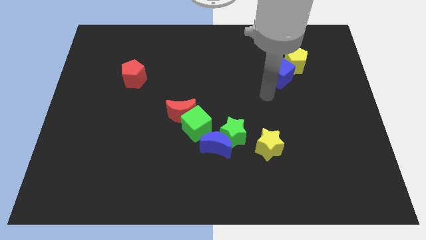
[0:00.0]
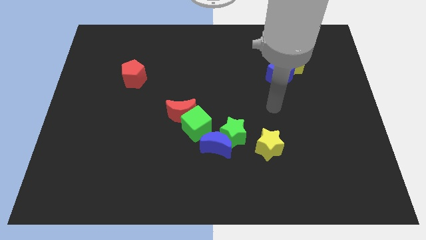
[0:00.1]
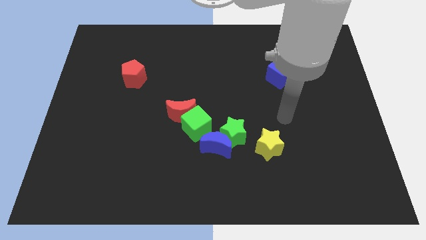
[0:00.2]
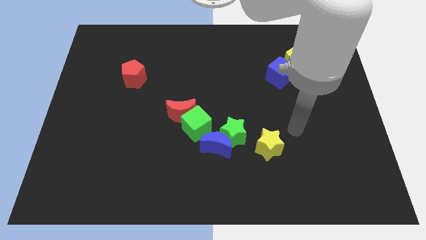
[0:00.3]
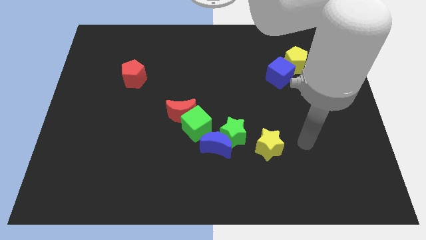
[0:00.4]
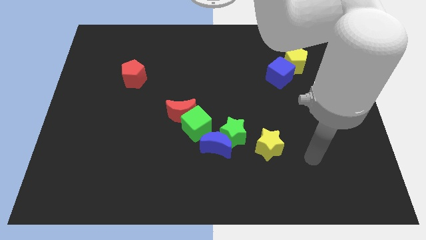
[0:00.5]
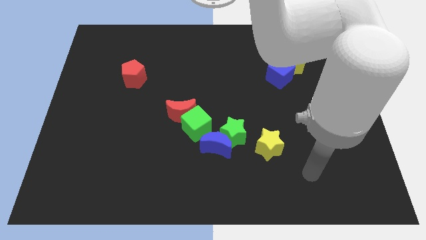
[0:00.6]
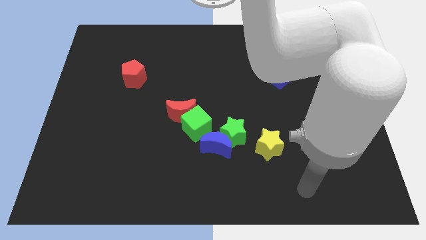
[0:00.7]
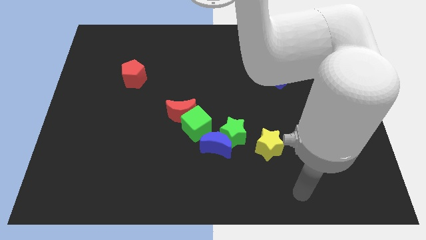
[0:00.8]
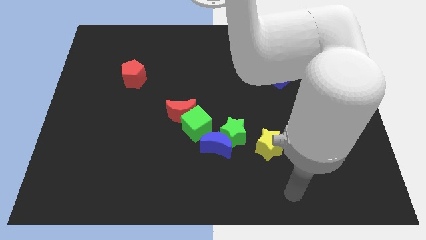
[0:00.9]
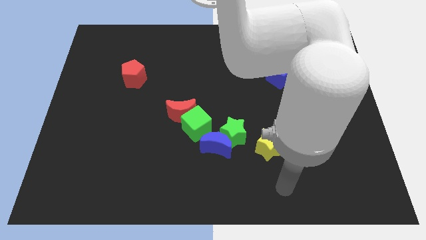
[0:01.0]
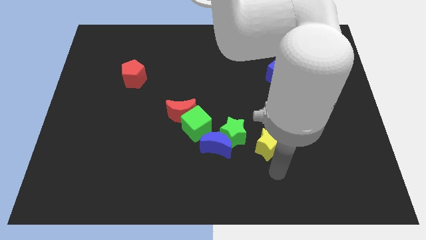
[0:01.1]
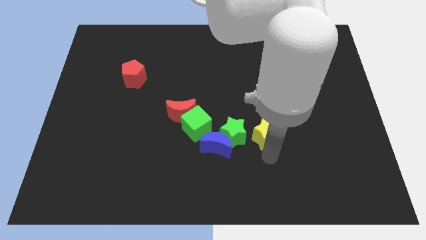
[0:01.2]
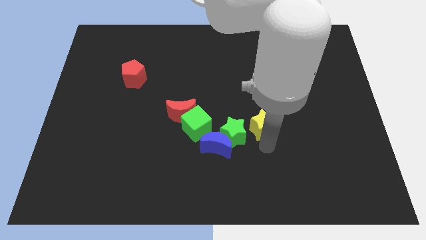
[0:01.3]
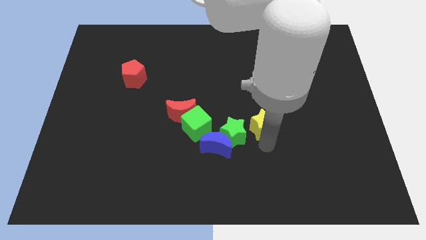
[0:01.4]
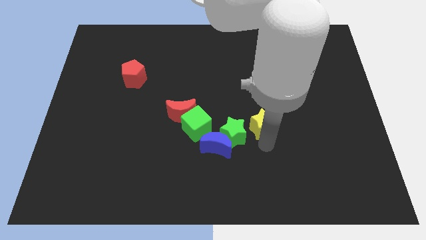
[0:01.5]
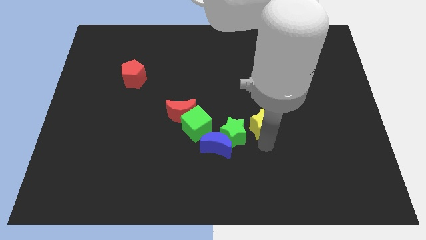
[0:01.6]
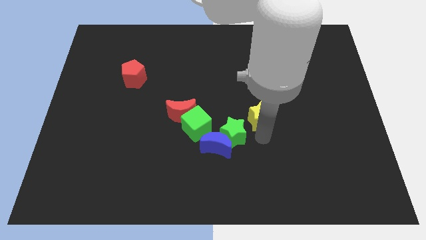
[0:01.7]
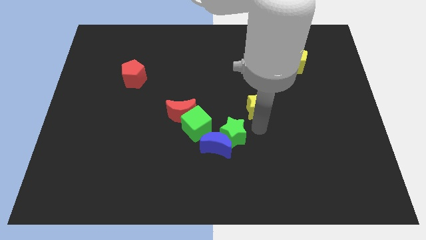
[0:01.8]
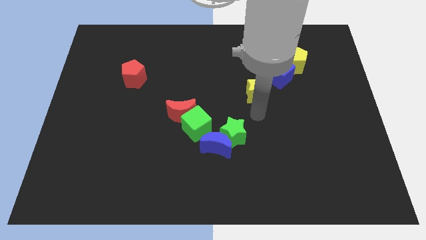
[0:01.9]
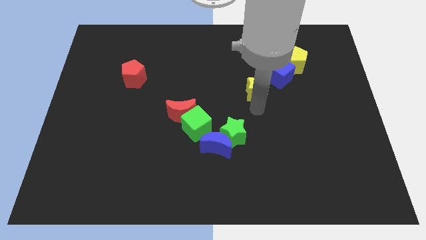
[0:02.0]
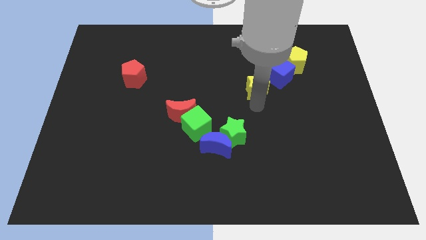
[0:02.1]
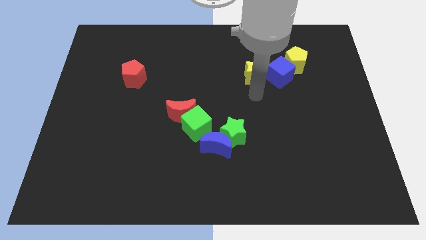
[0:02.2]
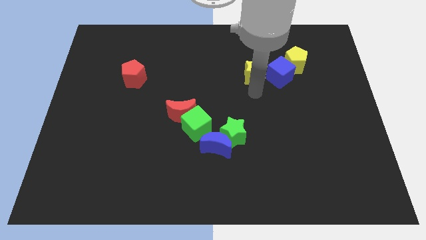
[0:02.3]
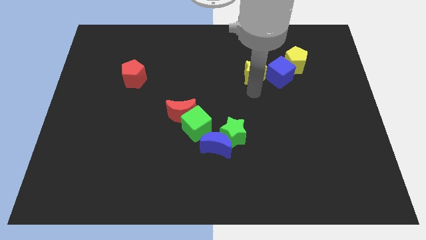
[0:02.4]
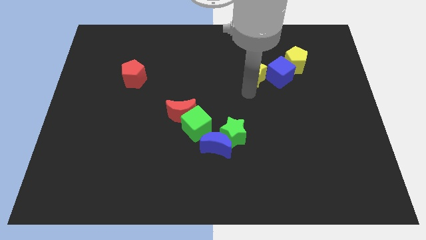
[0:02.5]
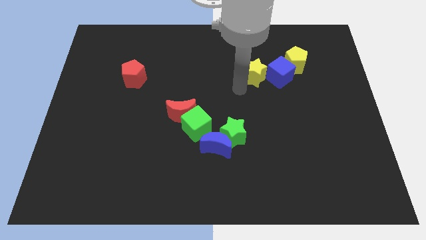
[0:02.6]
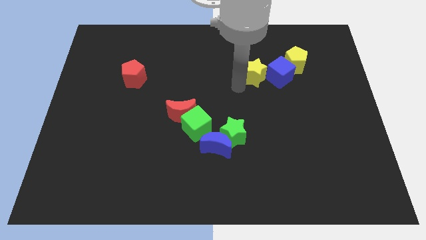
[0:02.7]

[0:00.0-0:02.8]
move the yellow star into the left of the blue cube

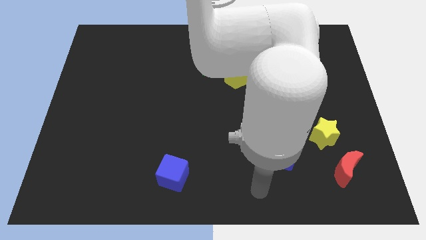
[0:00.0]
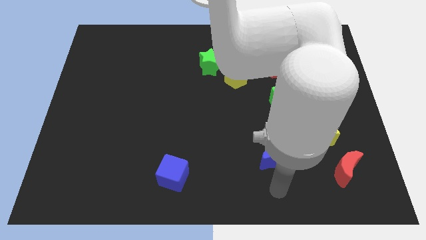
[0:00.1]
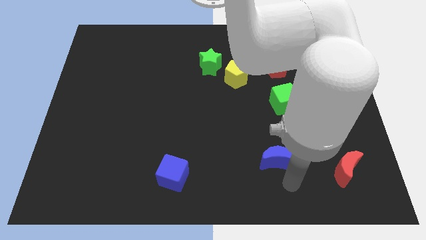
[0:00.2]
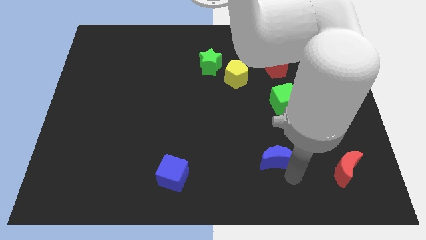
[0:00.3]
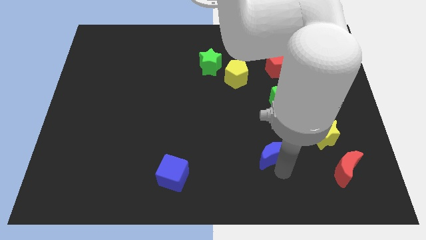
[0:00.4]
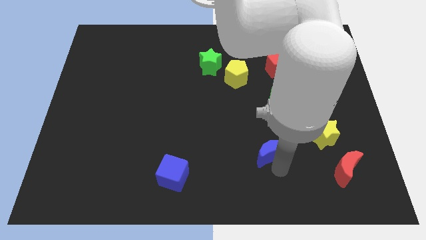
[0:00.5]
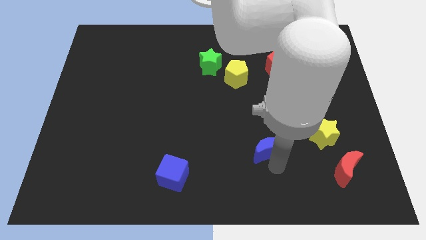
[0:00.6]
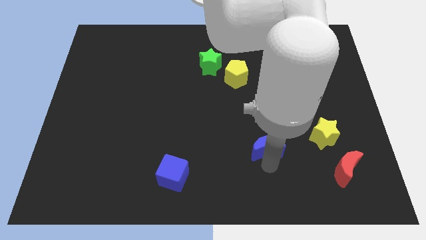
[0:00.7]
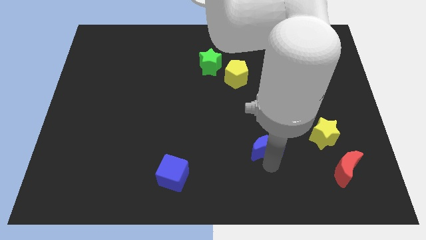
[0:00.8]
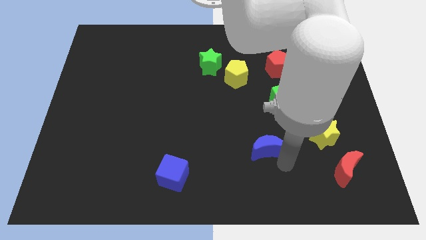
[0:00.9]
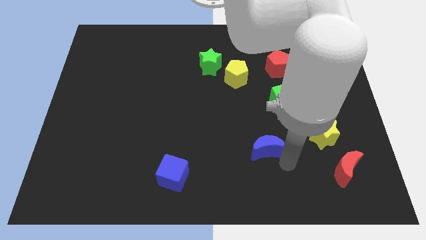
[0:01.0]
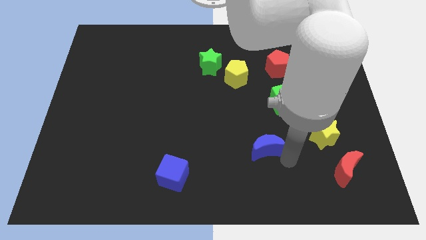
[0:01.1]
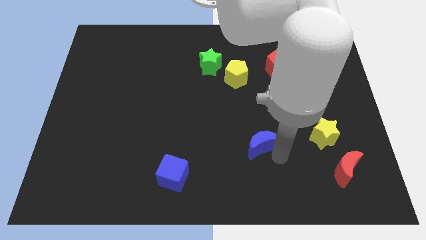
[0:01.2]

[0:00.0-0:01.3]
place the blue moon left to the yellow star

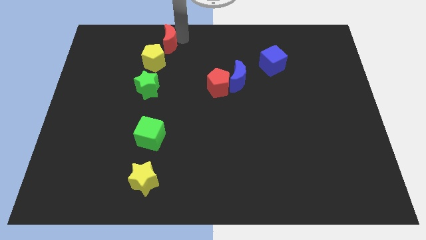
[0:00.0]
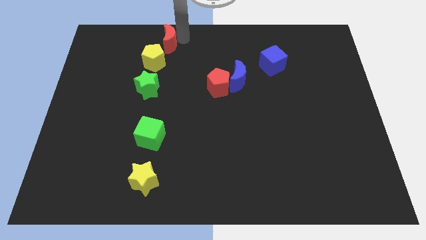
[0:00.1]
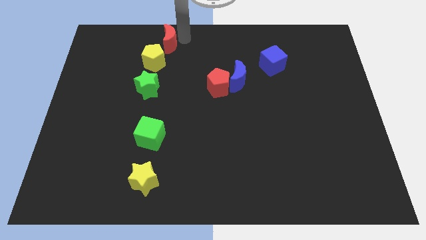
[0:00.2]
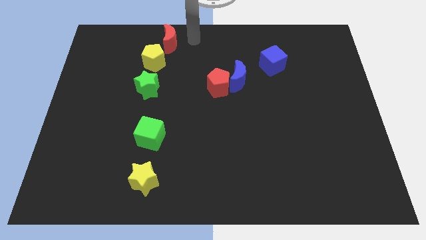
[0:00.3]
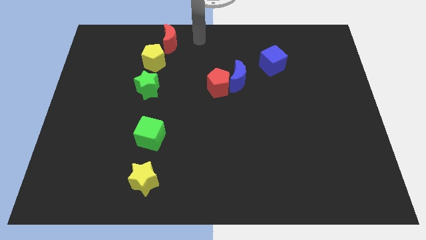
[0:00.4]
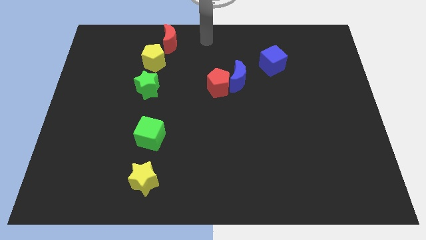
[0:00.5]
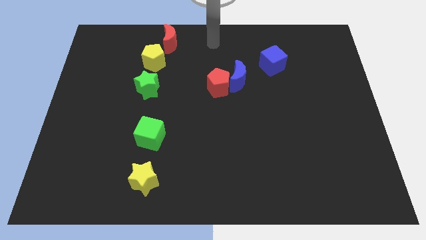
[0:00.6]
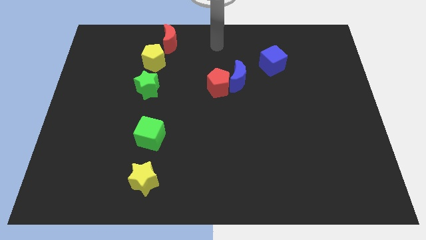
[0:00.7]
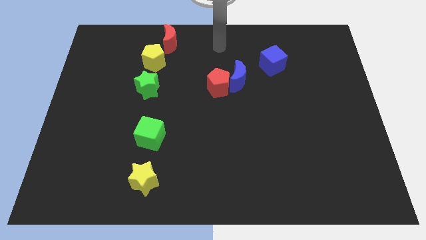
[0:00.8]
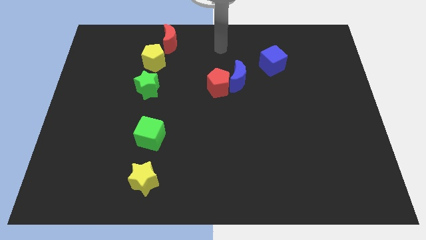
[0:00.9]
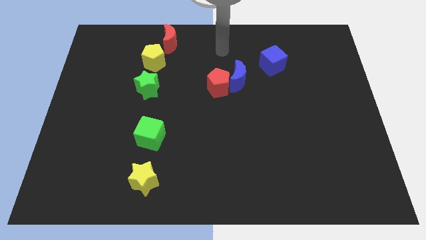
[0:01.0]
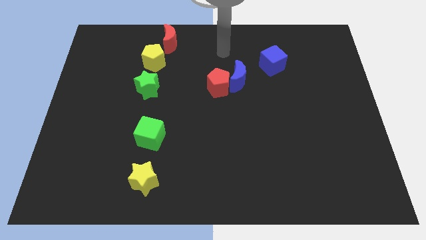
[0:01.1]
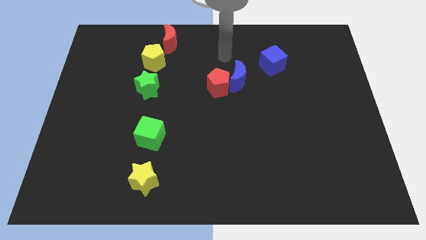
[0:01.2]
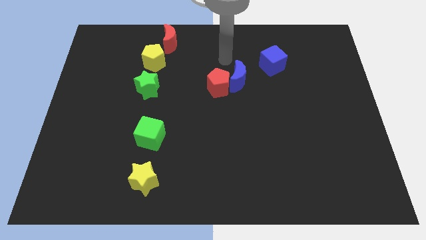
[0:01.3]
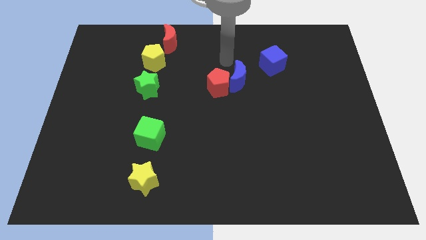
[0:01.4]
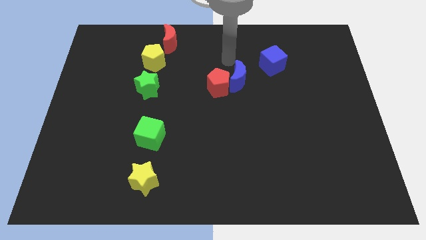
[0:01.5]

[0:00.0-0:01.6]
move your arm away from red crescent

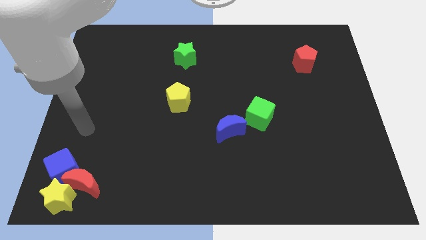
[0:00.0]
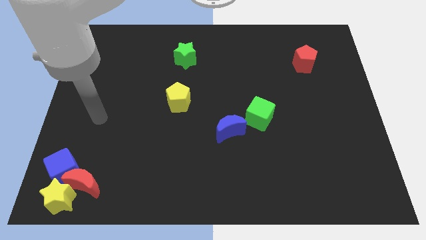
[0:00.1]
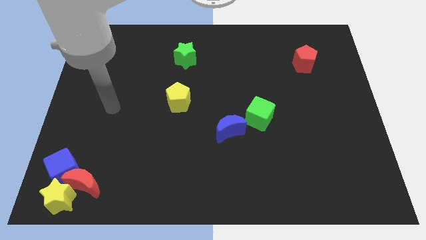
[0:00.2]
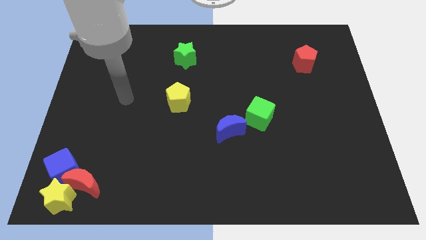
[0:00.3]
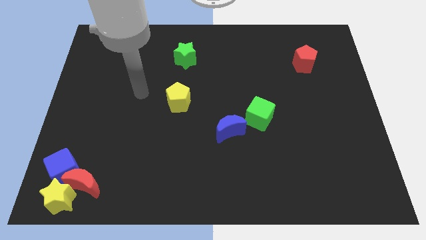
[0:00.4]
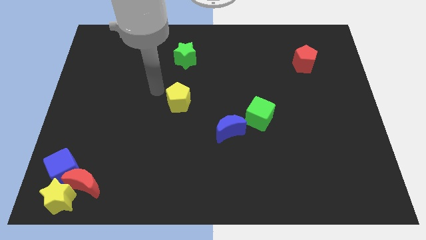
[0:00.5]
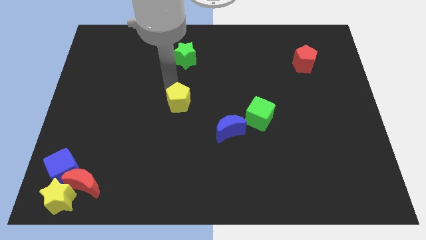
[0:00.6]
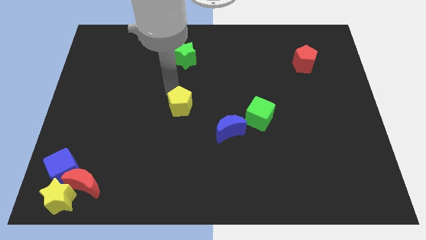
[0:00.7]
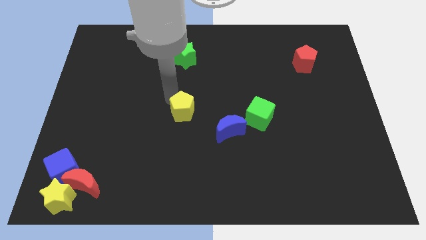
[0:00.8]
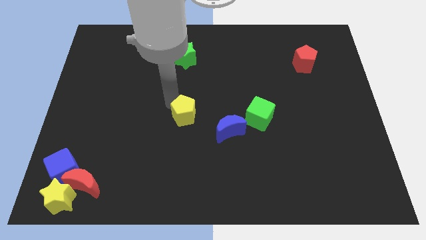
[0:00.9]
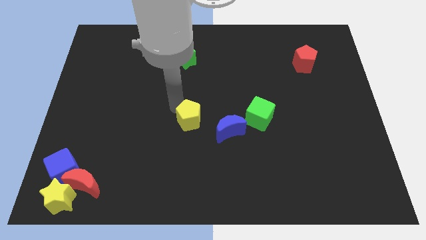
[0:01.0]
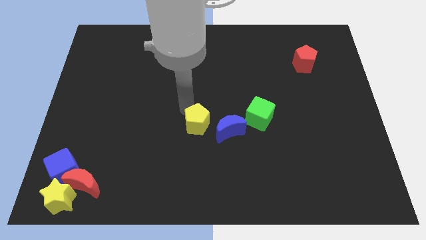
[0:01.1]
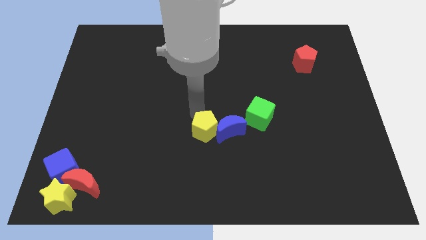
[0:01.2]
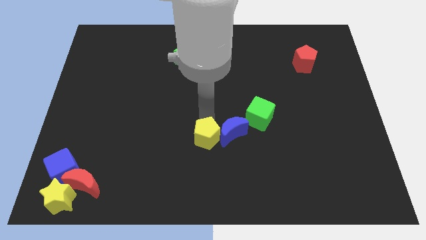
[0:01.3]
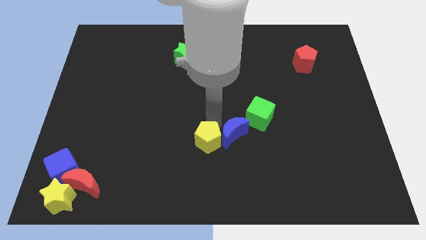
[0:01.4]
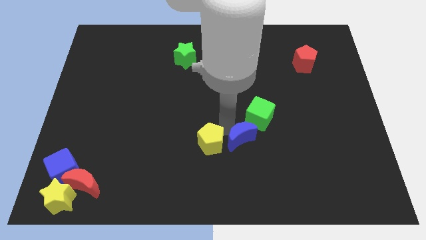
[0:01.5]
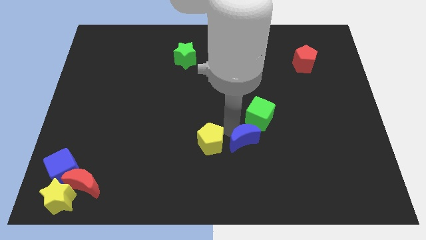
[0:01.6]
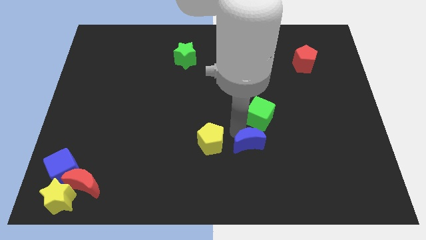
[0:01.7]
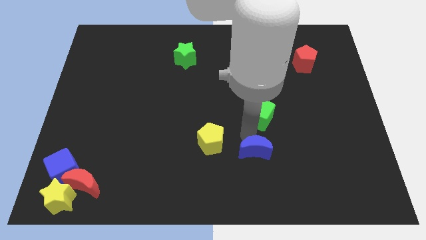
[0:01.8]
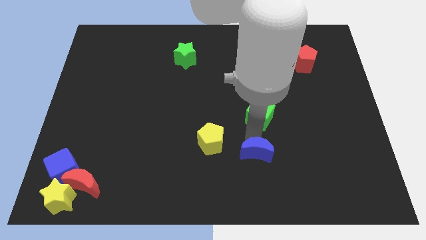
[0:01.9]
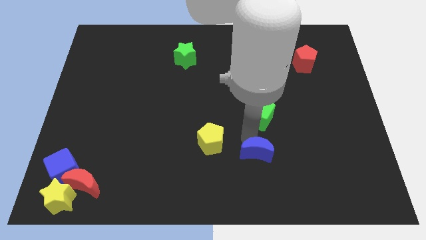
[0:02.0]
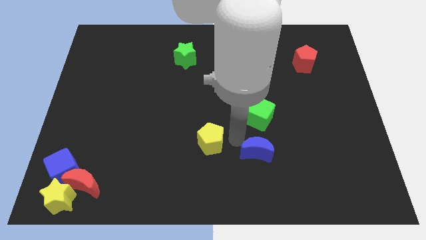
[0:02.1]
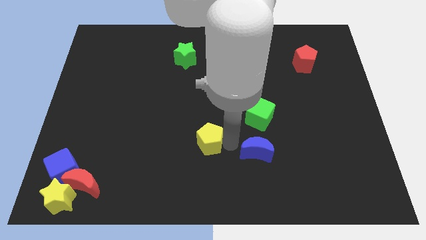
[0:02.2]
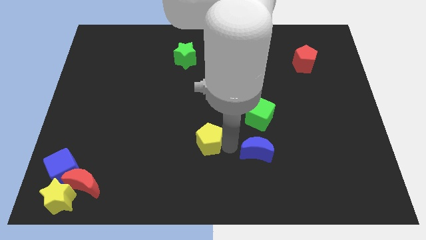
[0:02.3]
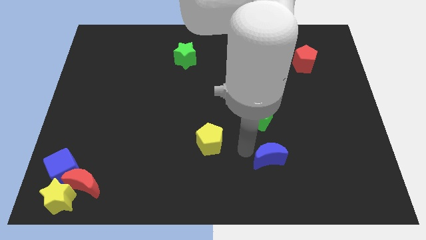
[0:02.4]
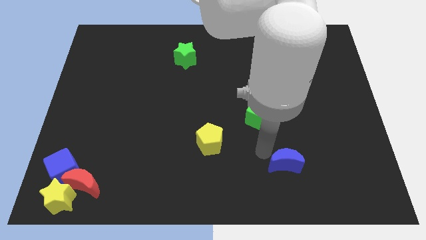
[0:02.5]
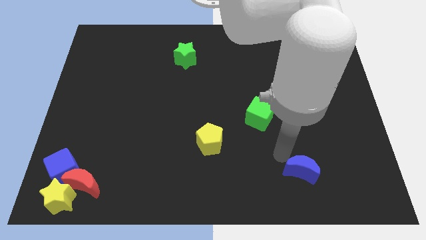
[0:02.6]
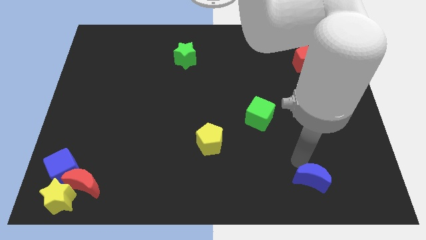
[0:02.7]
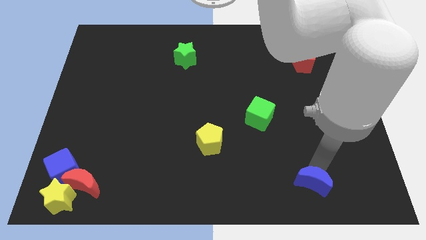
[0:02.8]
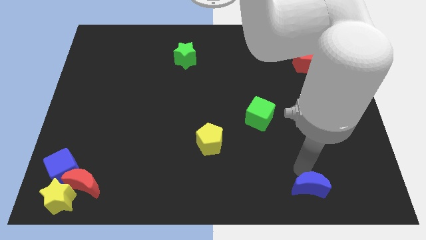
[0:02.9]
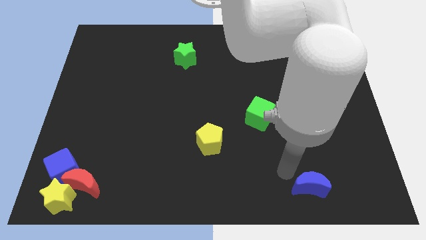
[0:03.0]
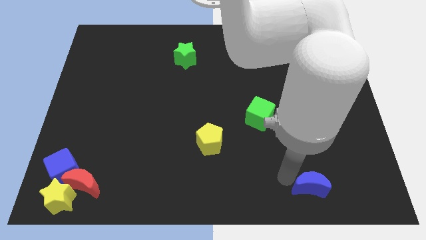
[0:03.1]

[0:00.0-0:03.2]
move the yellow pentagon and blue crescent diagonal to each other
